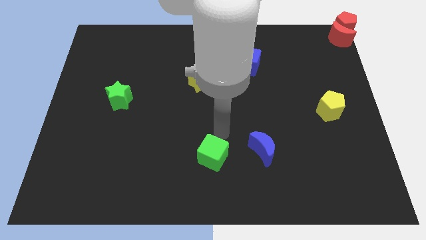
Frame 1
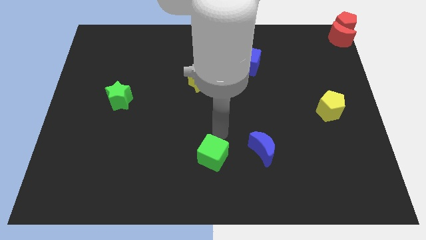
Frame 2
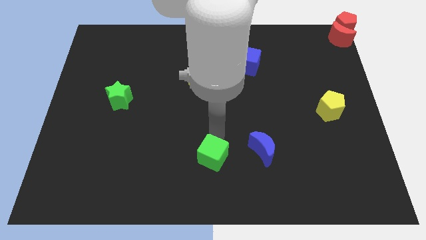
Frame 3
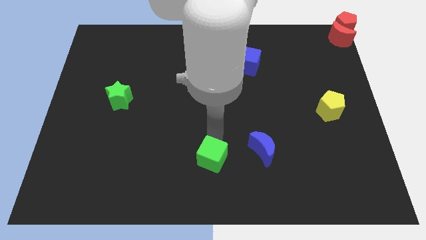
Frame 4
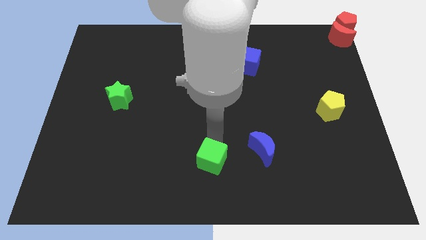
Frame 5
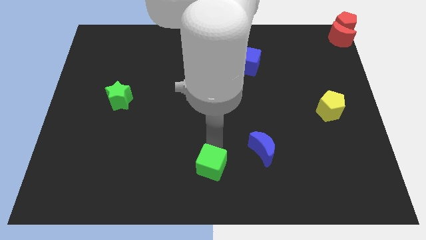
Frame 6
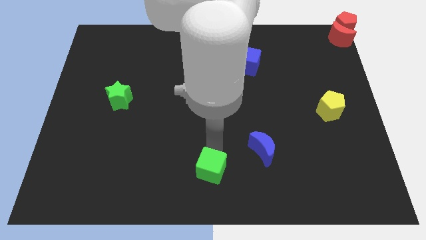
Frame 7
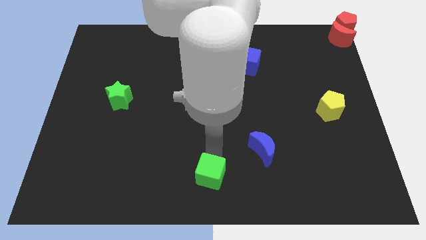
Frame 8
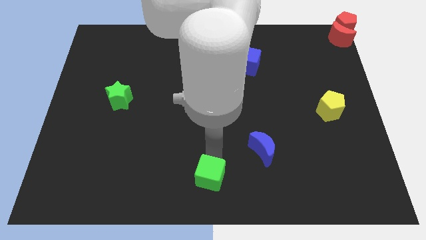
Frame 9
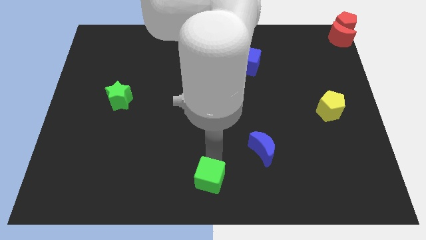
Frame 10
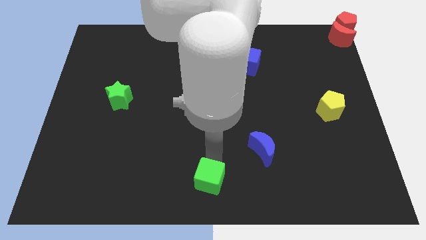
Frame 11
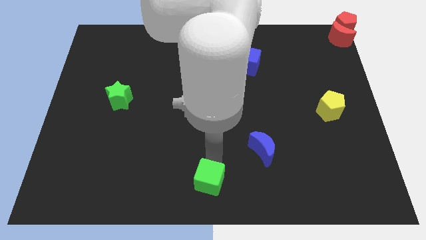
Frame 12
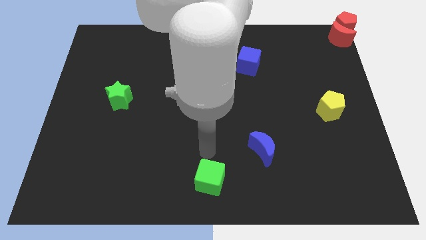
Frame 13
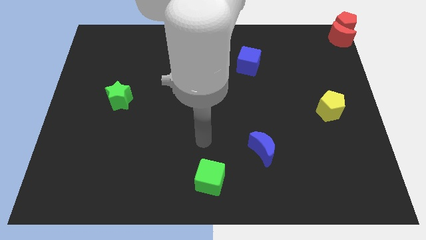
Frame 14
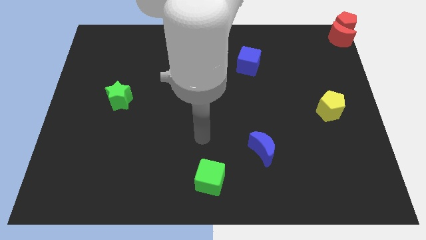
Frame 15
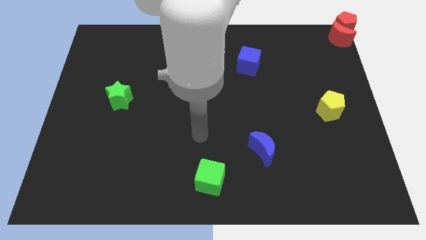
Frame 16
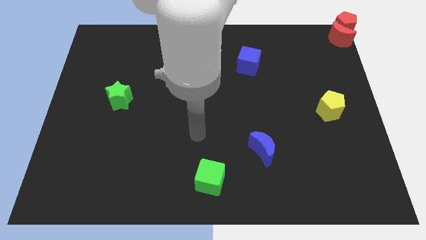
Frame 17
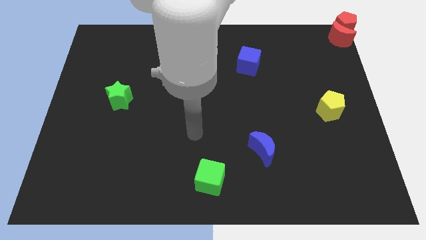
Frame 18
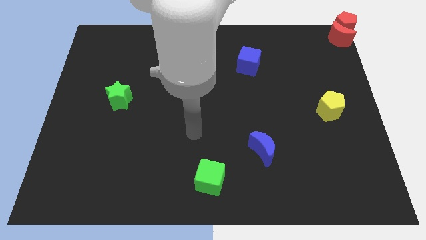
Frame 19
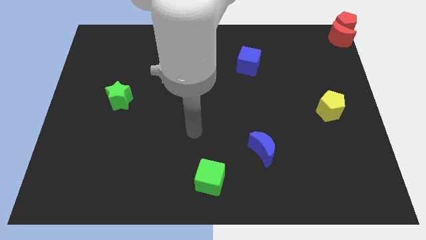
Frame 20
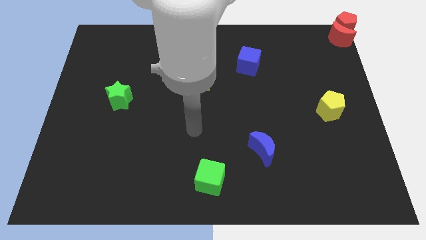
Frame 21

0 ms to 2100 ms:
move the green cube slightly to the bottom center of the board

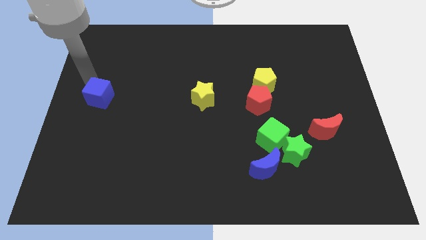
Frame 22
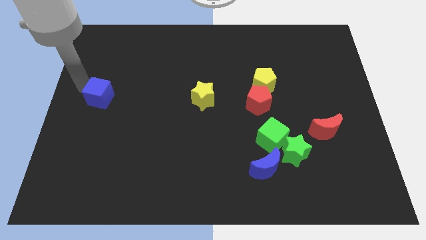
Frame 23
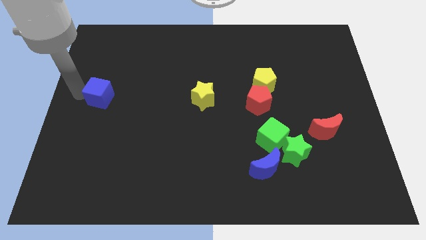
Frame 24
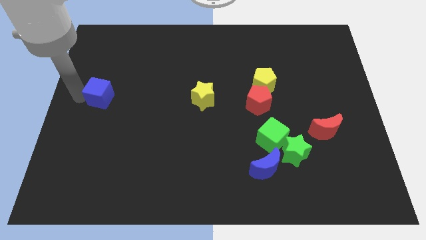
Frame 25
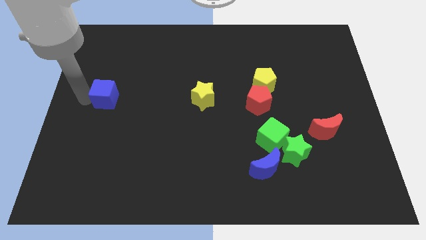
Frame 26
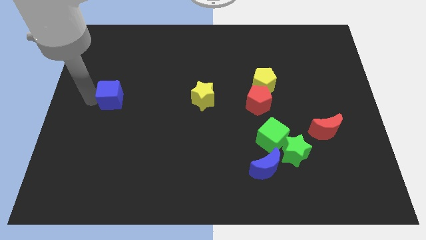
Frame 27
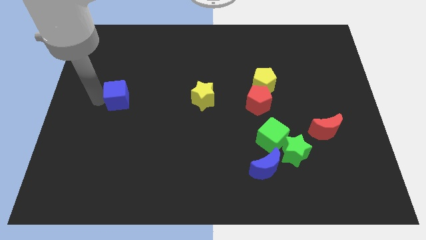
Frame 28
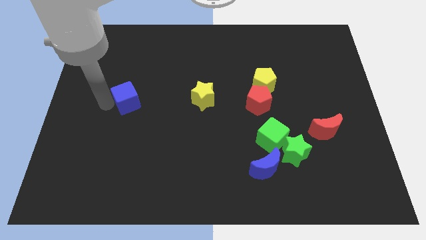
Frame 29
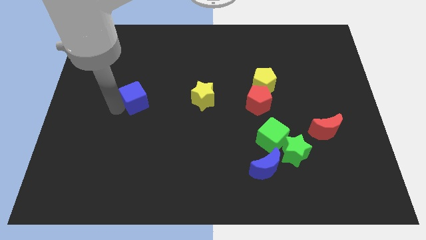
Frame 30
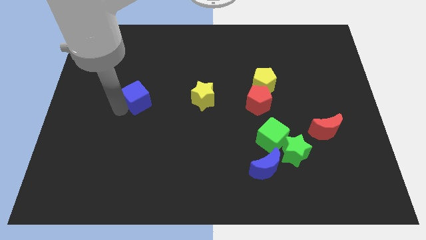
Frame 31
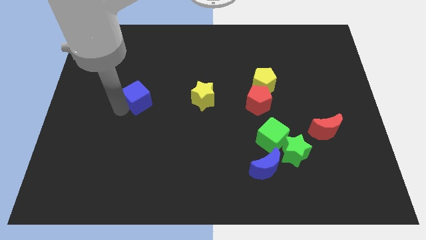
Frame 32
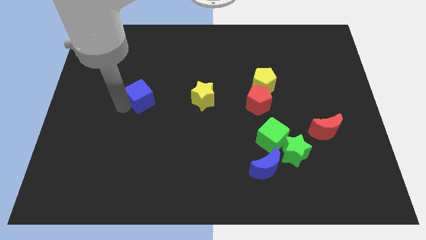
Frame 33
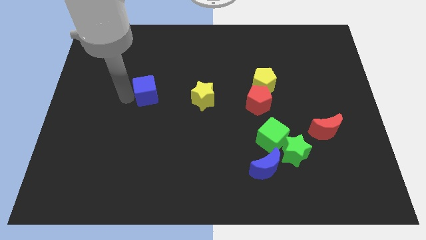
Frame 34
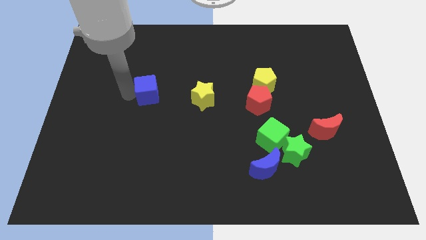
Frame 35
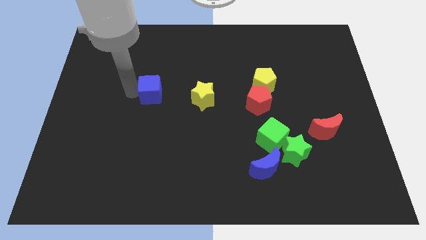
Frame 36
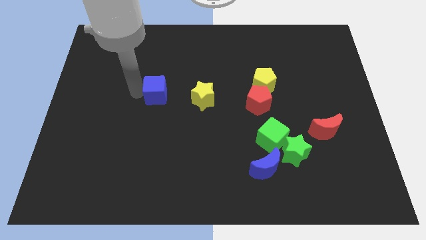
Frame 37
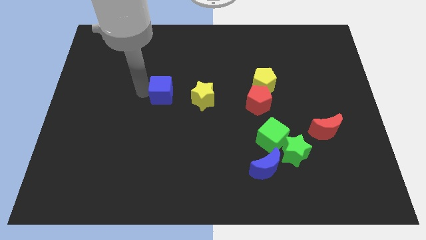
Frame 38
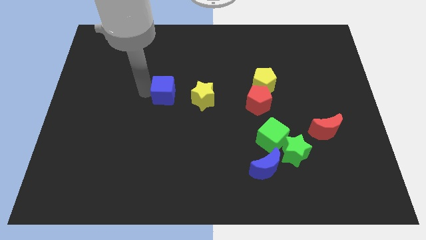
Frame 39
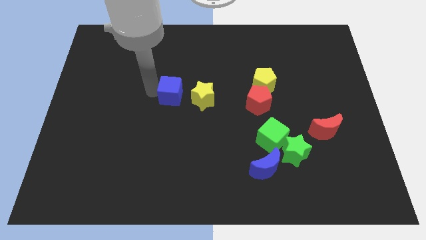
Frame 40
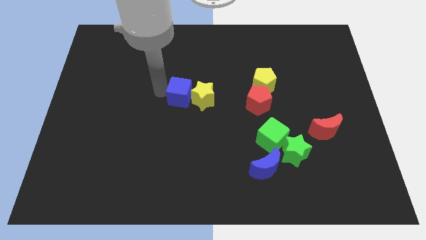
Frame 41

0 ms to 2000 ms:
move the blue cube towards the yellow star

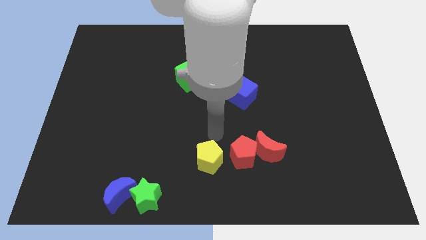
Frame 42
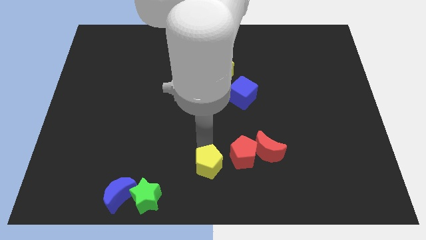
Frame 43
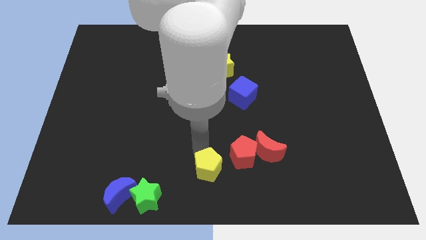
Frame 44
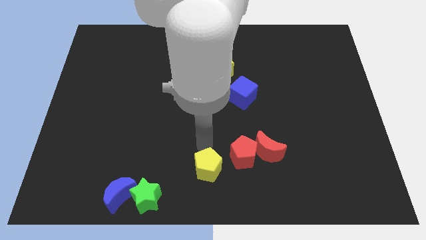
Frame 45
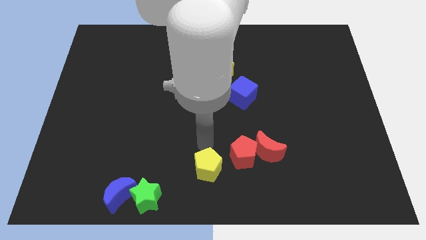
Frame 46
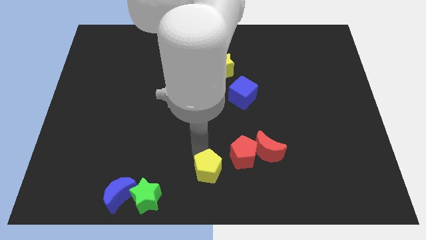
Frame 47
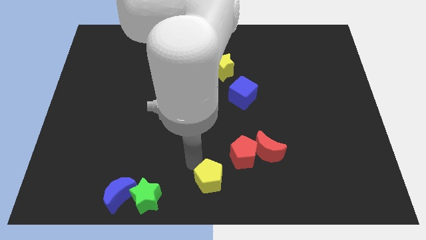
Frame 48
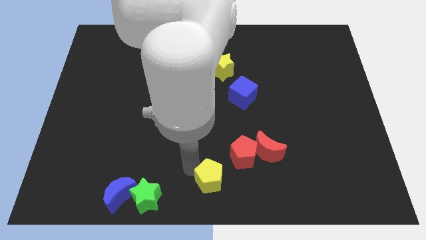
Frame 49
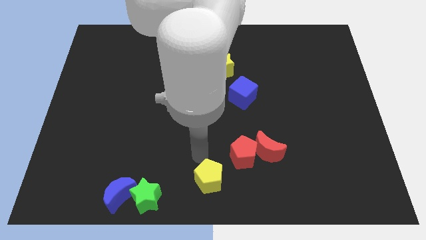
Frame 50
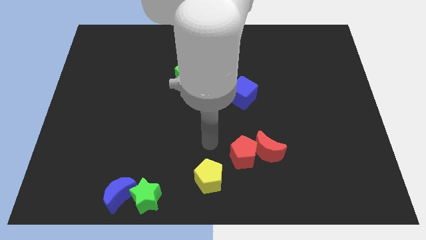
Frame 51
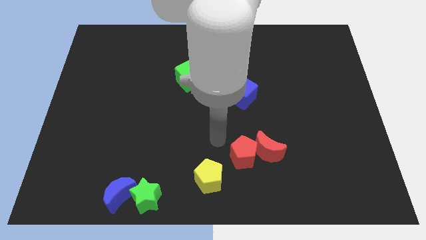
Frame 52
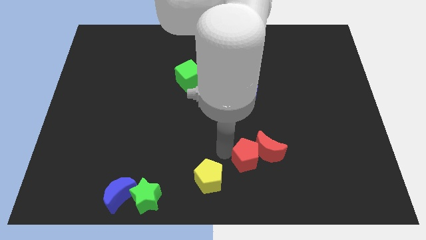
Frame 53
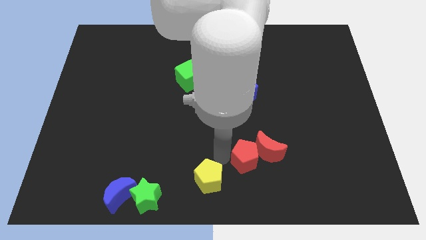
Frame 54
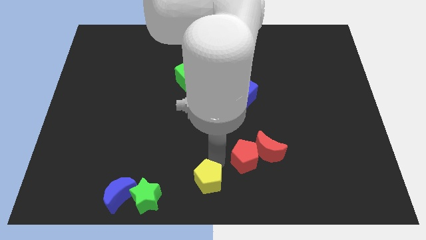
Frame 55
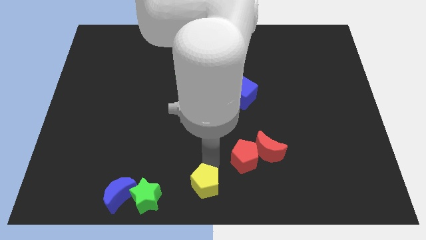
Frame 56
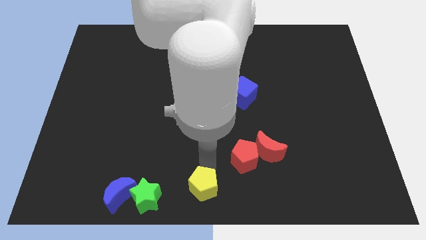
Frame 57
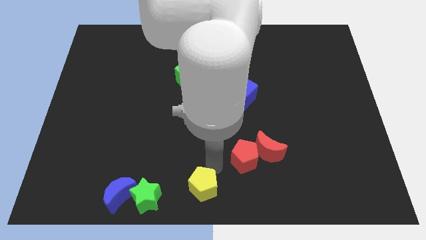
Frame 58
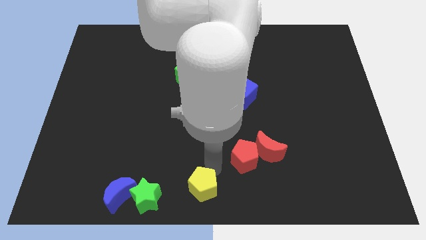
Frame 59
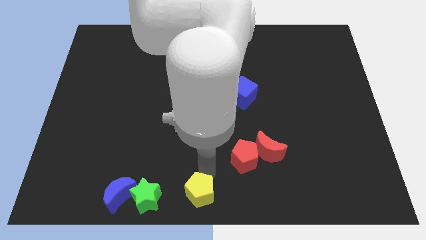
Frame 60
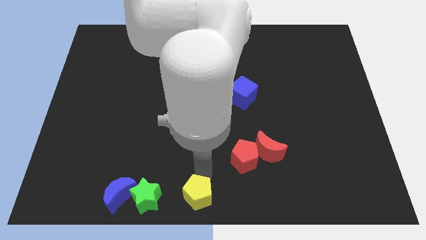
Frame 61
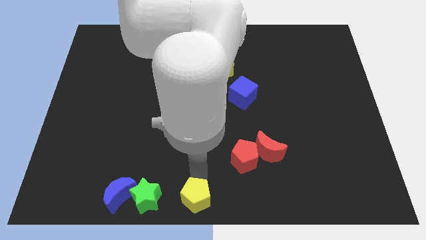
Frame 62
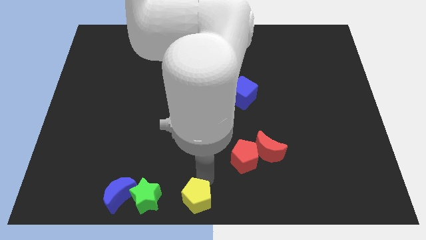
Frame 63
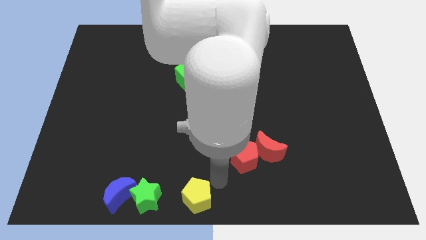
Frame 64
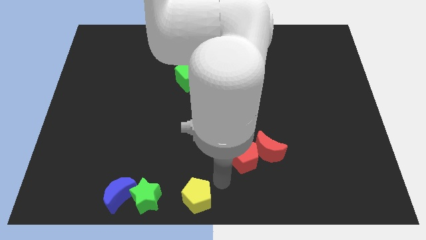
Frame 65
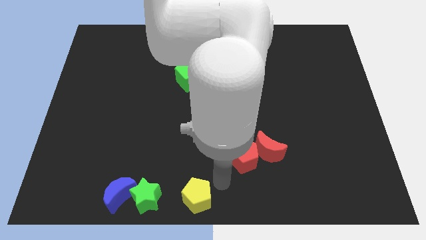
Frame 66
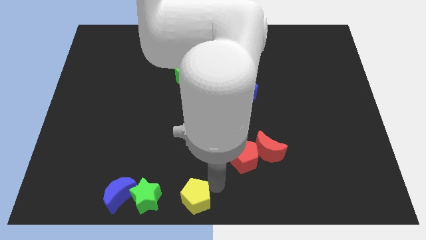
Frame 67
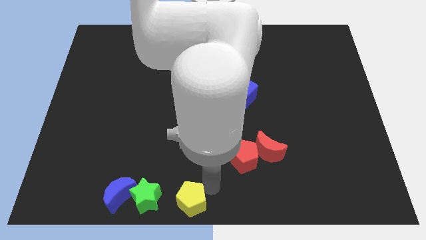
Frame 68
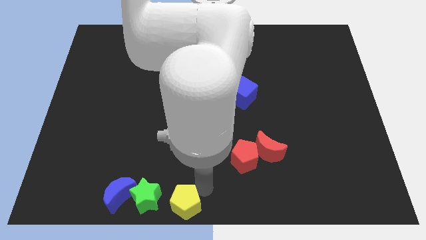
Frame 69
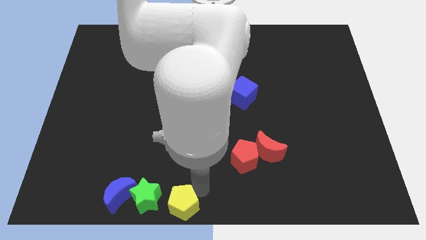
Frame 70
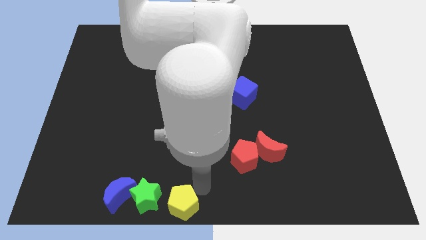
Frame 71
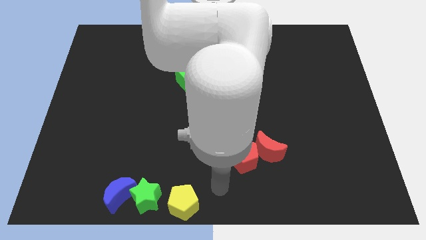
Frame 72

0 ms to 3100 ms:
move yellow pentagon to bottom center

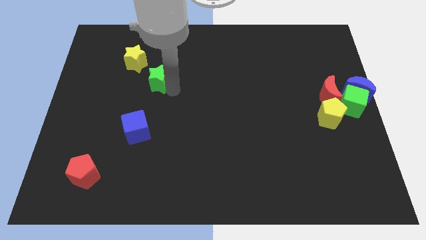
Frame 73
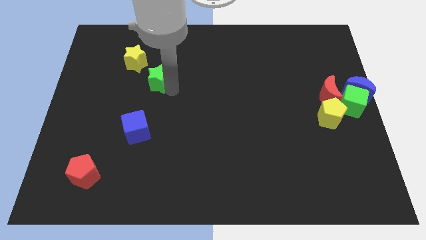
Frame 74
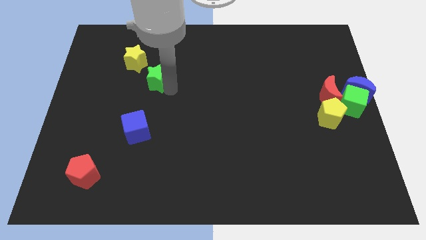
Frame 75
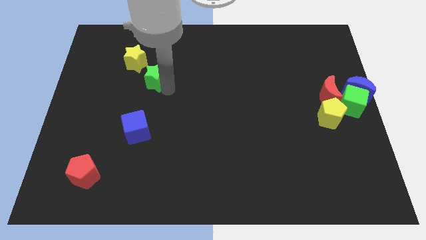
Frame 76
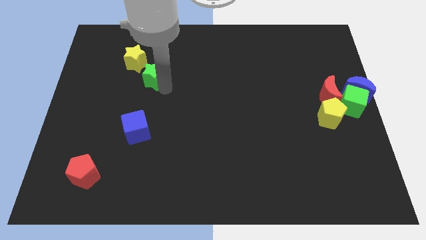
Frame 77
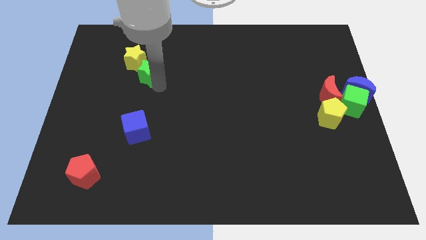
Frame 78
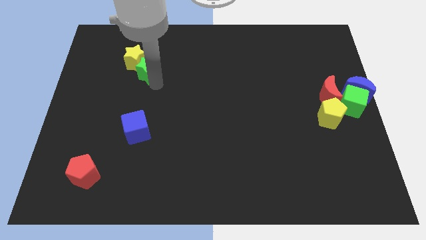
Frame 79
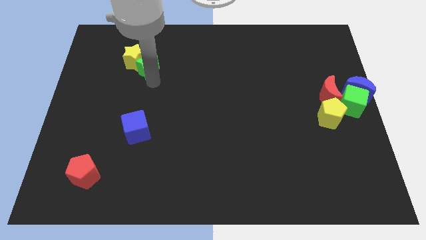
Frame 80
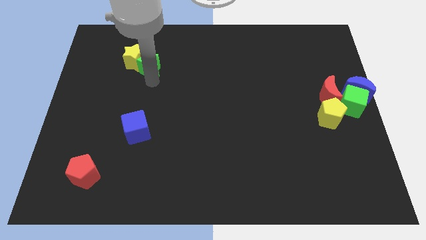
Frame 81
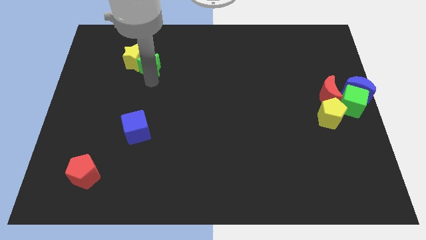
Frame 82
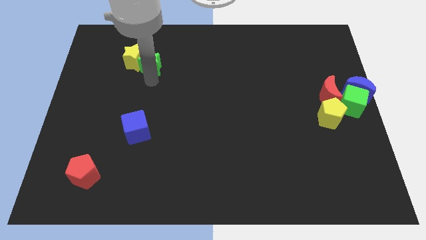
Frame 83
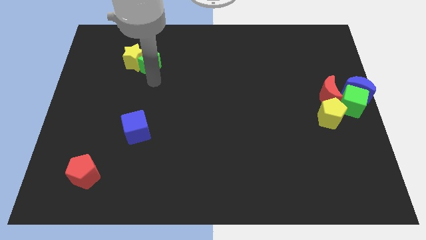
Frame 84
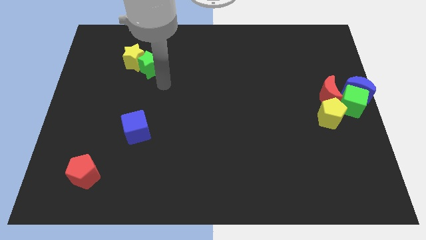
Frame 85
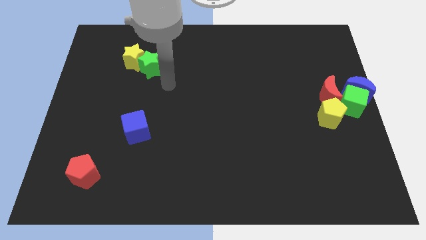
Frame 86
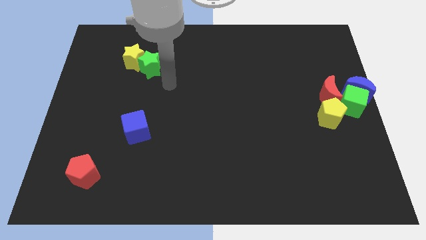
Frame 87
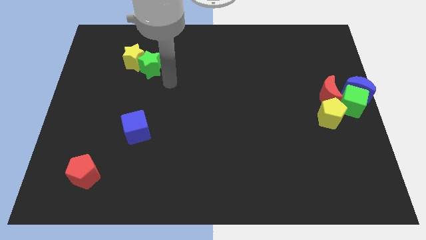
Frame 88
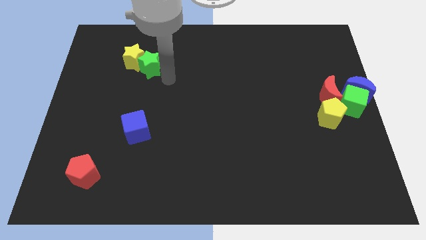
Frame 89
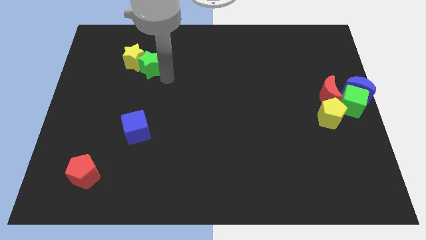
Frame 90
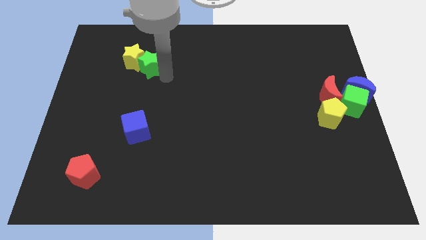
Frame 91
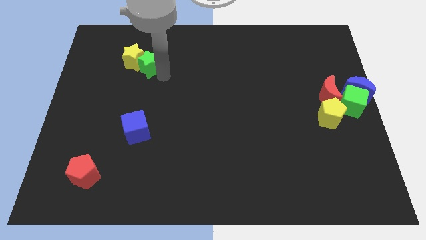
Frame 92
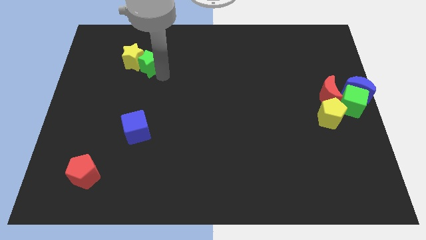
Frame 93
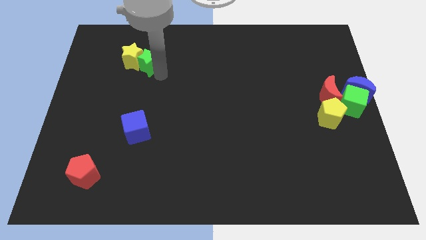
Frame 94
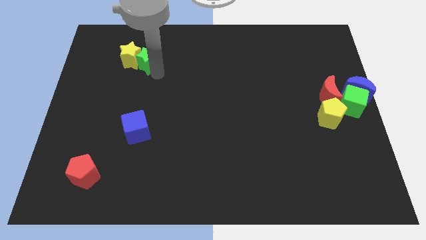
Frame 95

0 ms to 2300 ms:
slide the green star close to yellow star
